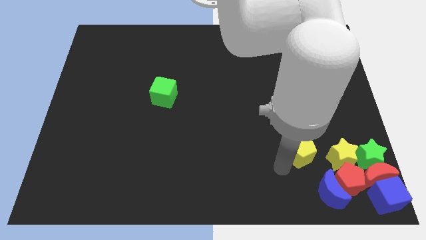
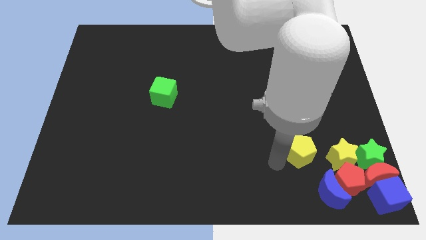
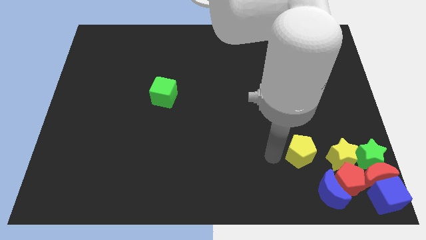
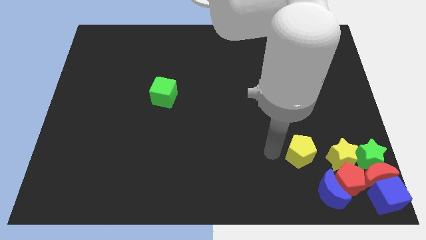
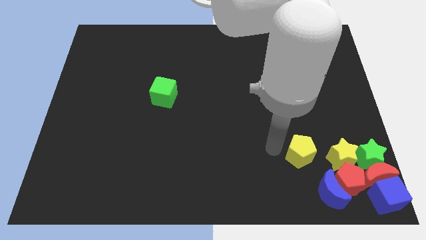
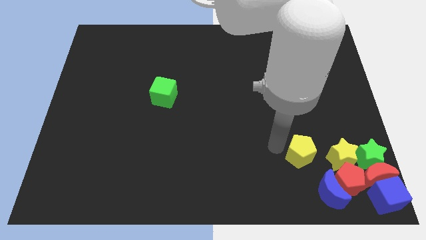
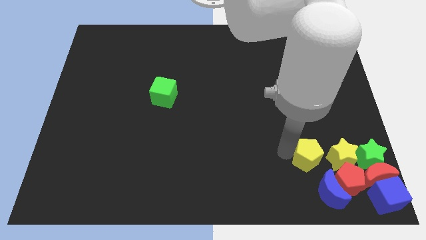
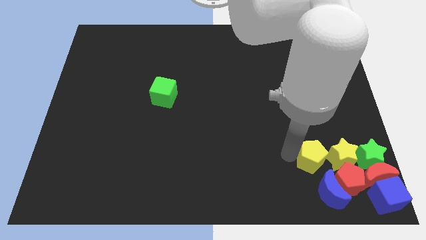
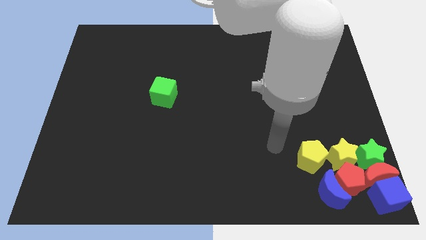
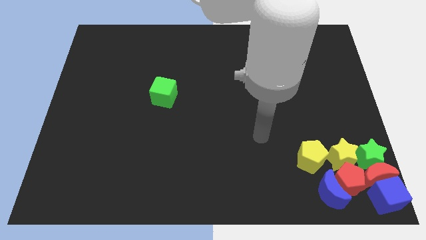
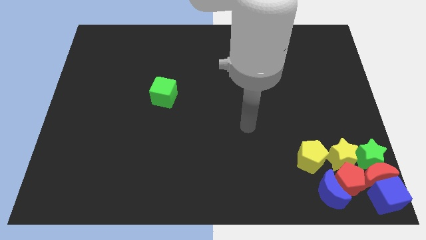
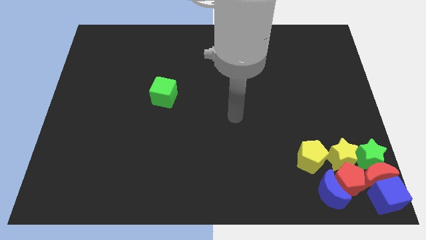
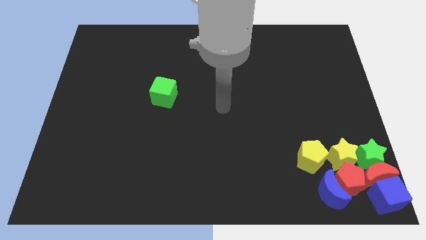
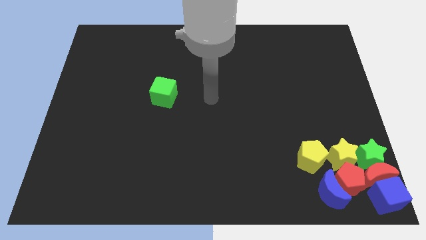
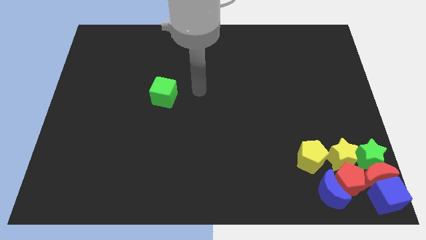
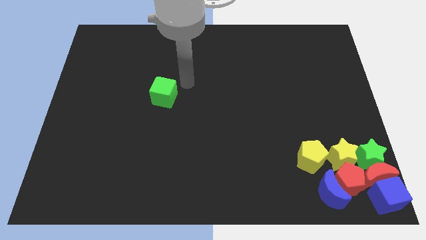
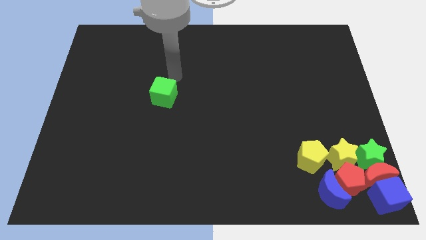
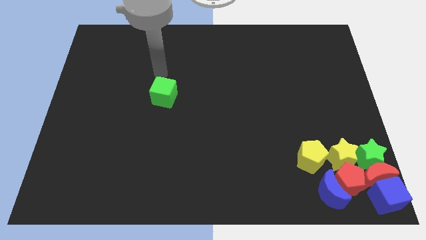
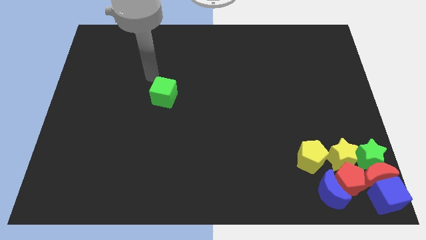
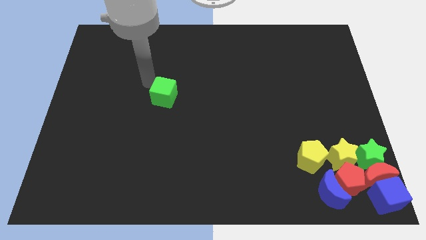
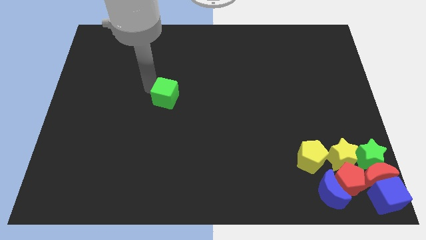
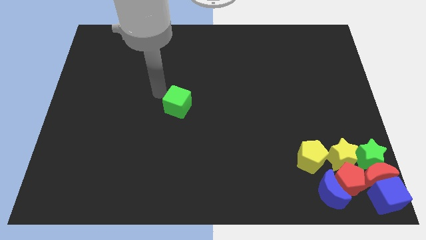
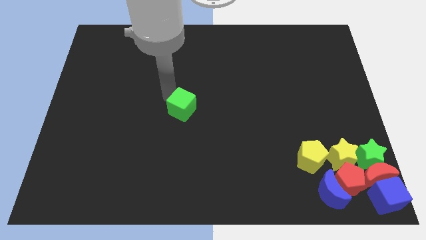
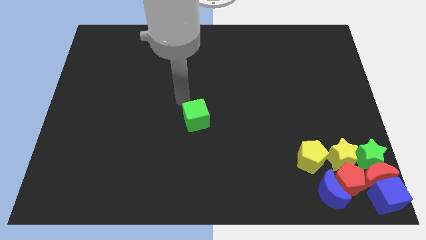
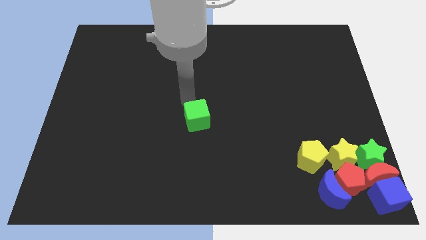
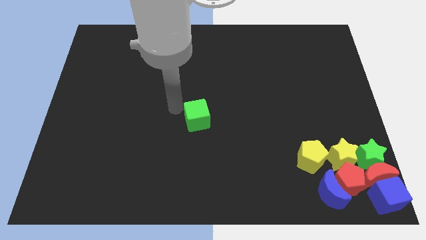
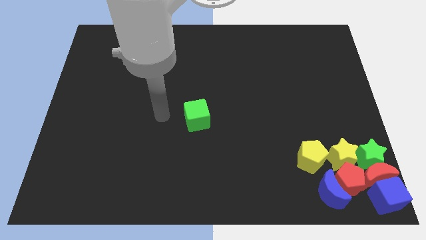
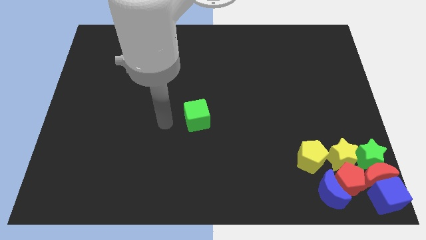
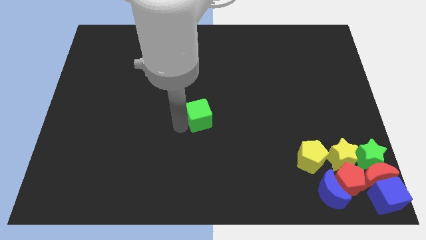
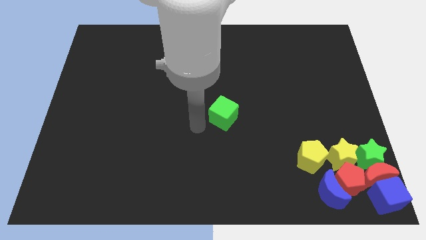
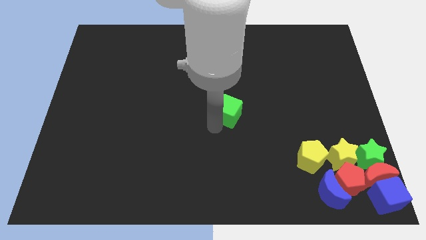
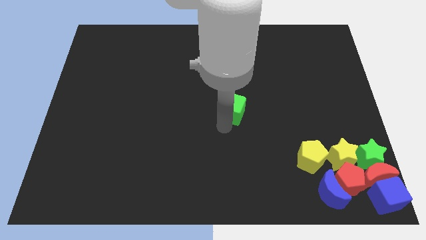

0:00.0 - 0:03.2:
move the green cube center of the board

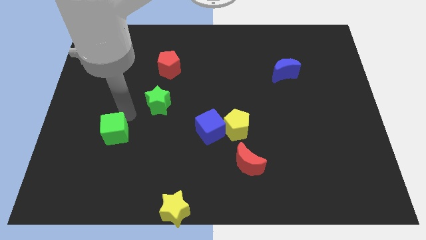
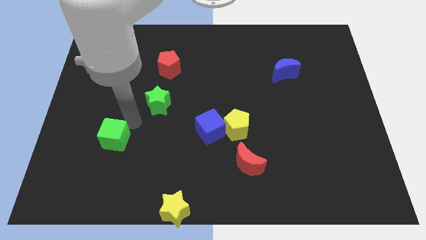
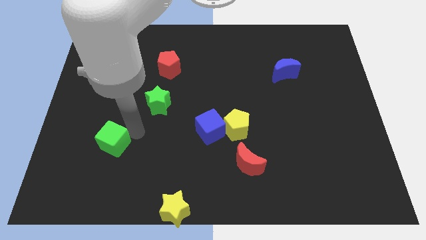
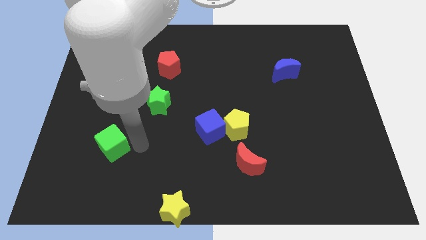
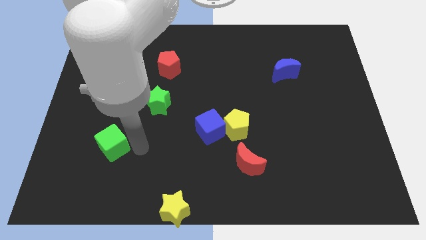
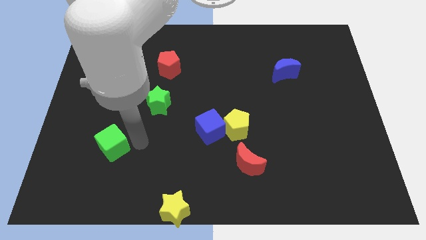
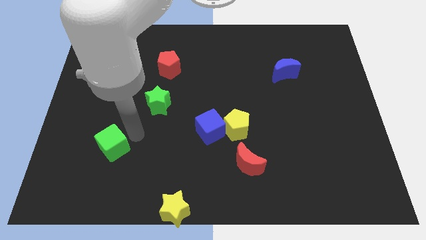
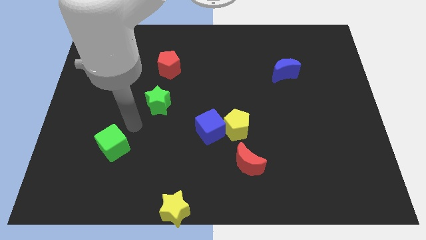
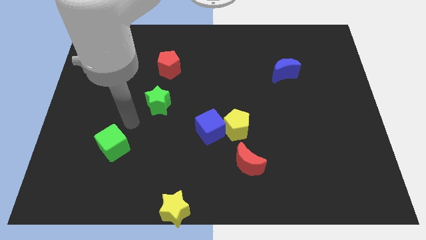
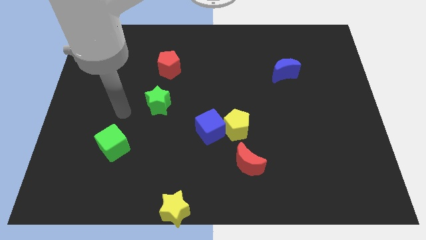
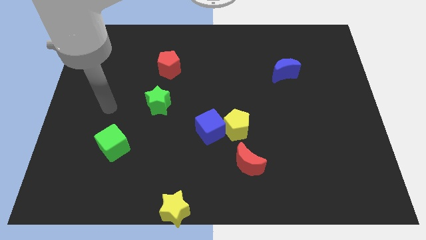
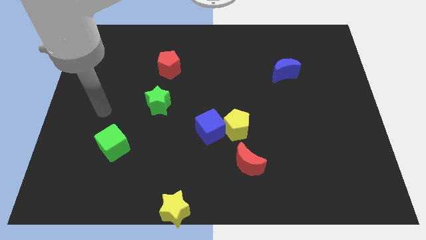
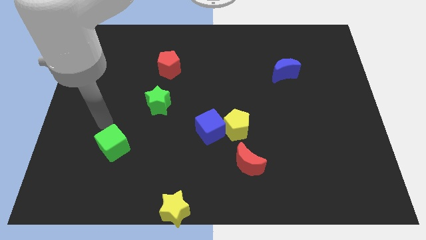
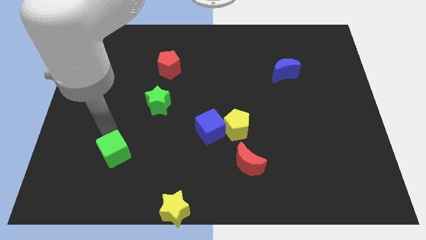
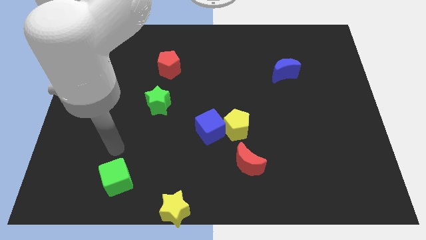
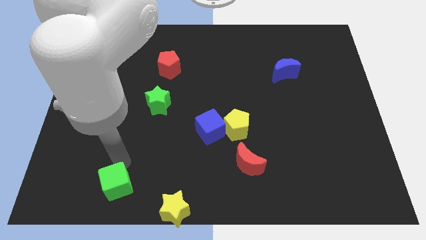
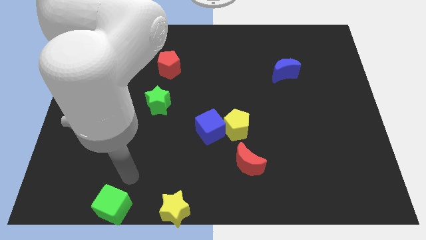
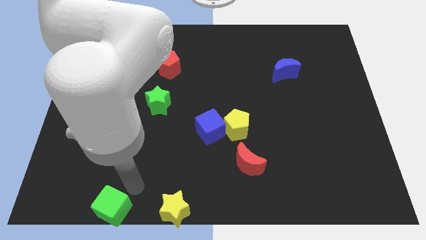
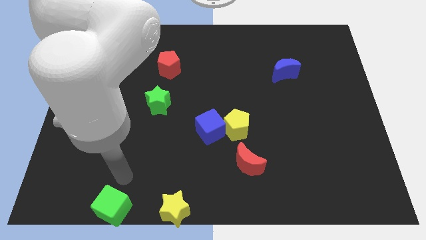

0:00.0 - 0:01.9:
push the green cube to the left of the yellow star

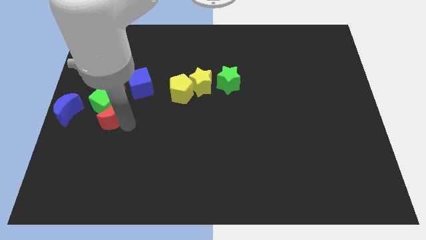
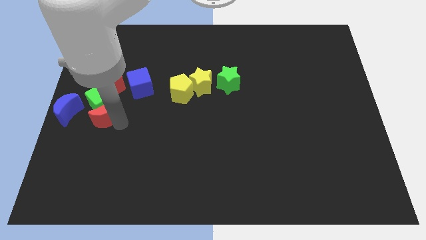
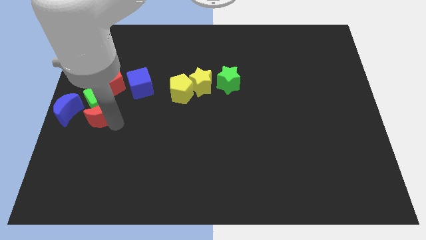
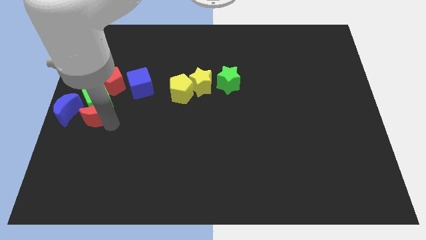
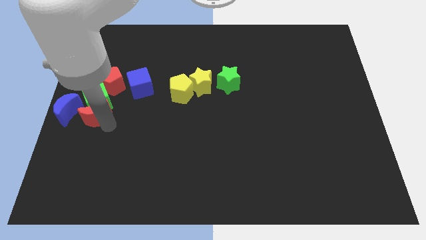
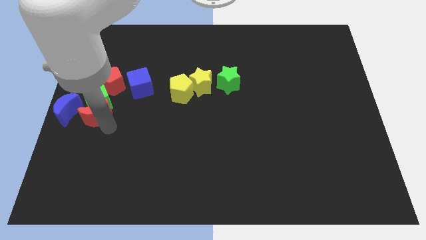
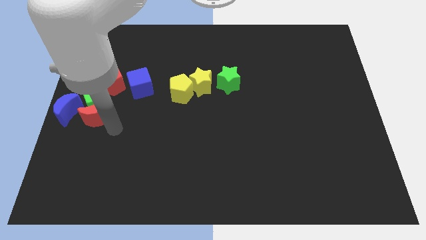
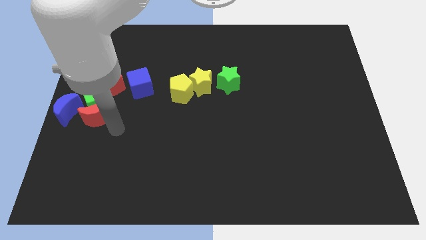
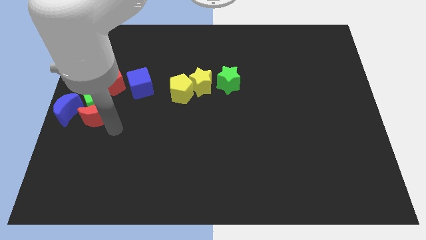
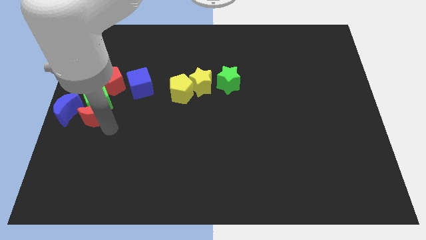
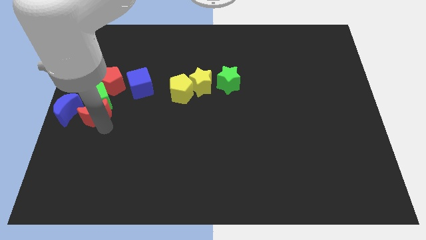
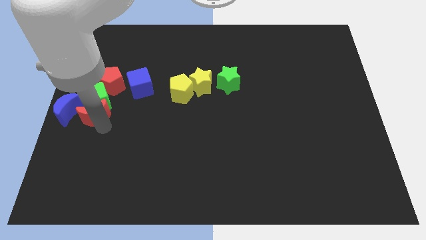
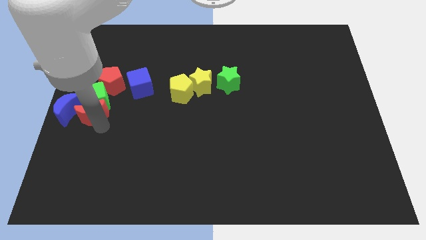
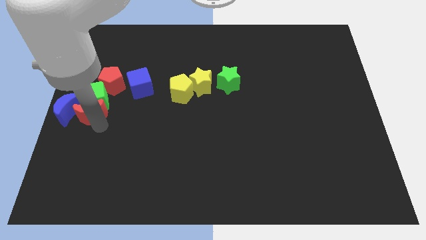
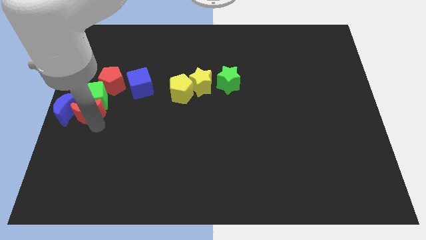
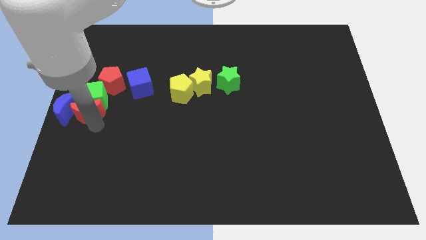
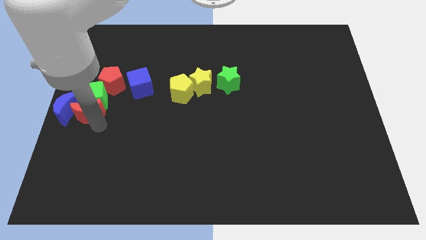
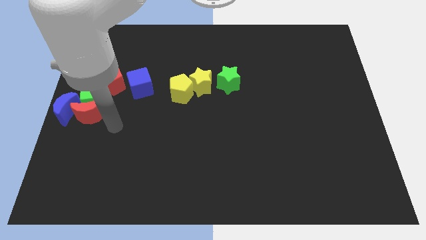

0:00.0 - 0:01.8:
push red moon along with green cube to the left center of board

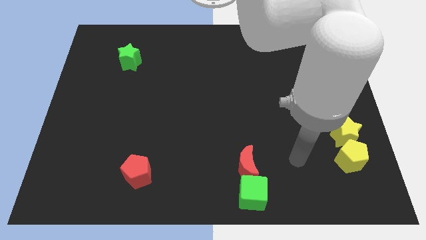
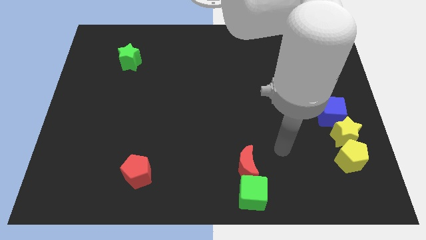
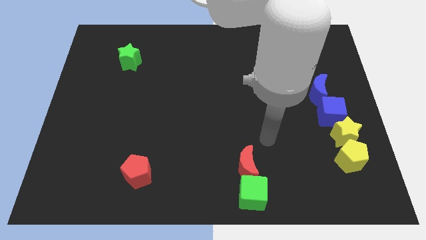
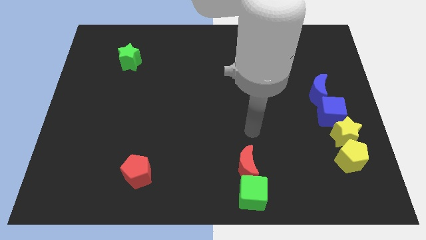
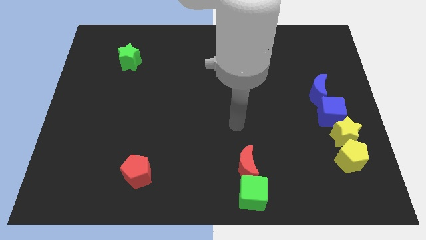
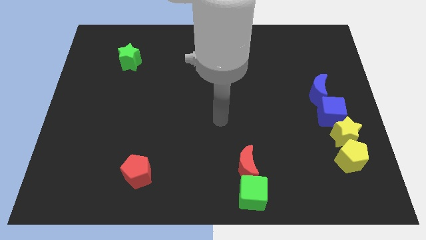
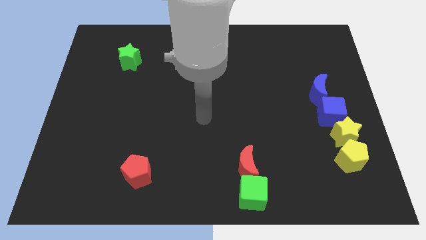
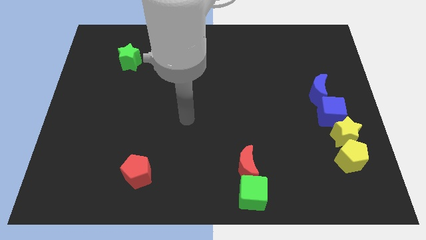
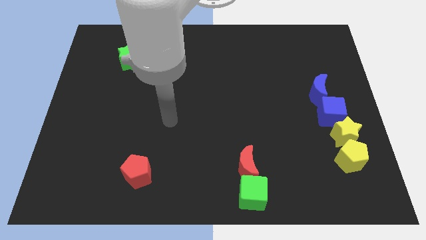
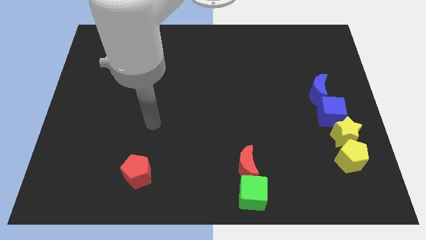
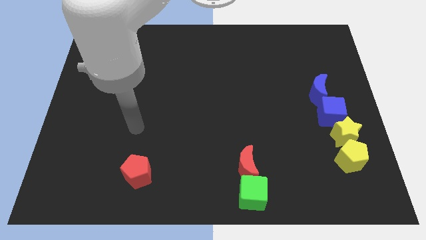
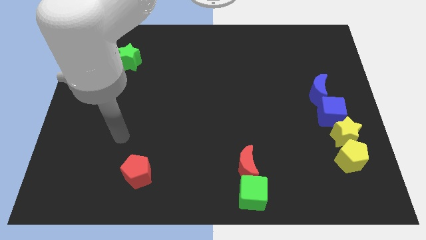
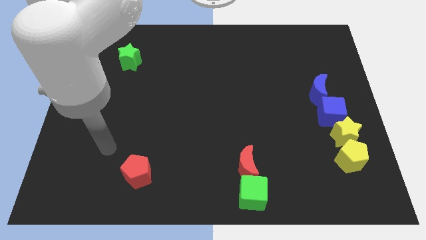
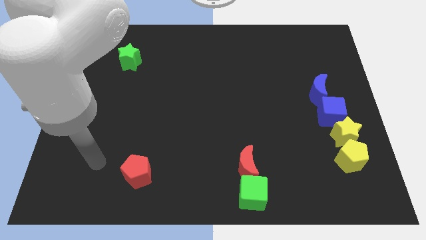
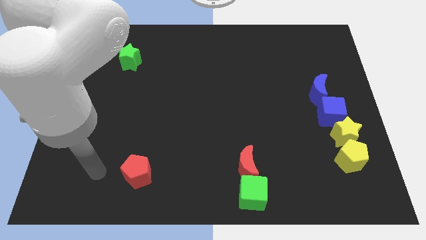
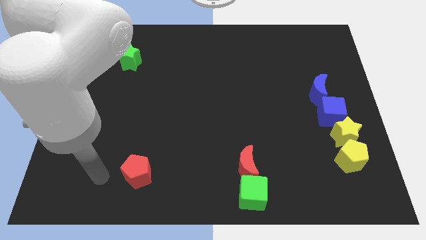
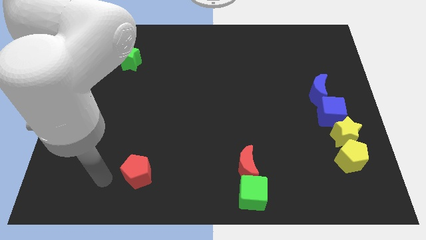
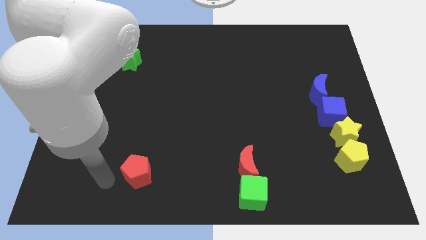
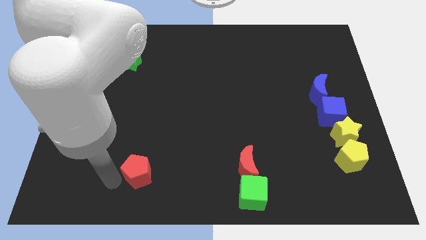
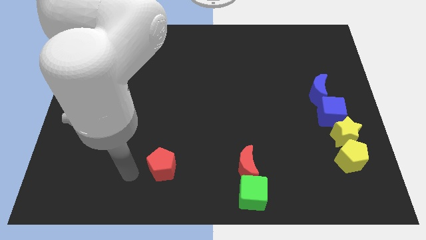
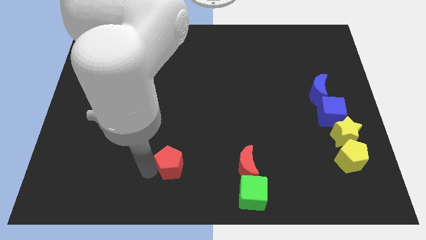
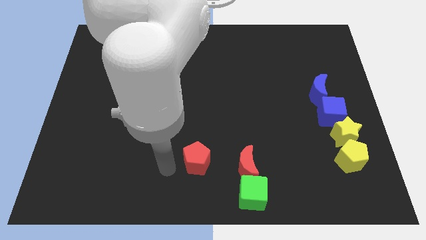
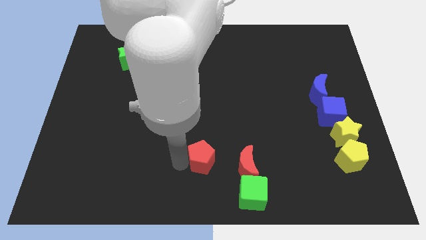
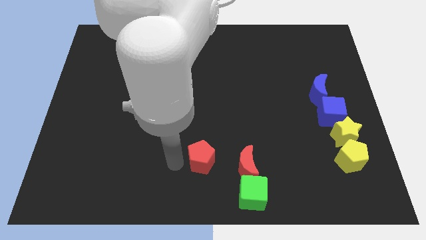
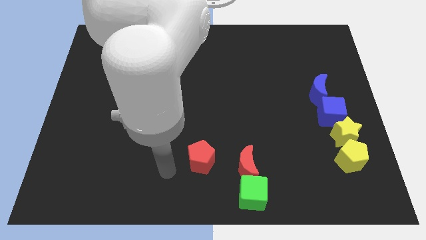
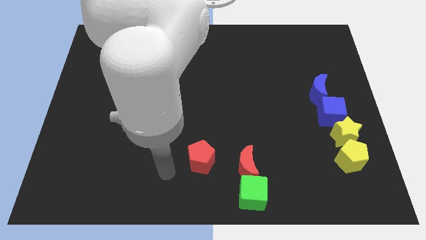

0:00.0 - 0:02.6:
push the red pentagon towards the red moon
